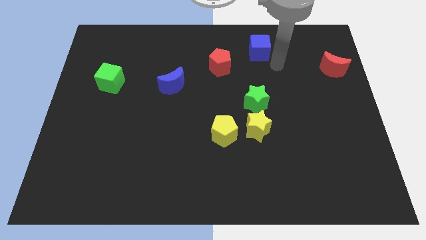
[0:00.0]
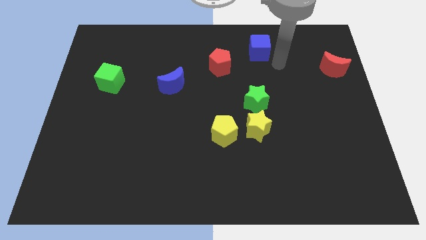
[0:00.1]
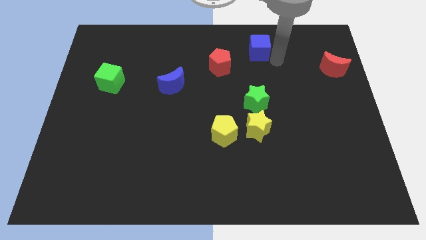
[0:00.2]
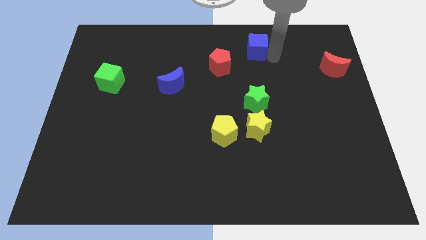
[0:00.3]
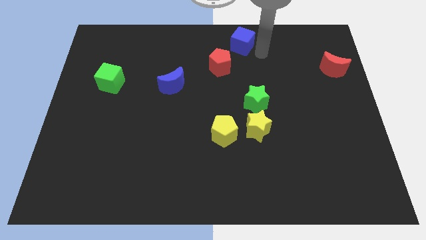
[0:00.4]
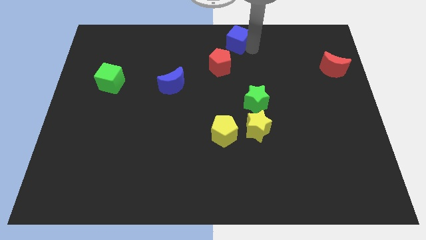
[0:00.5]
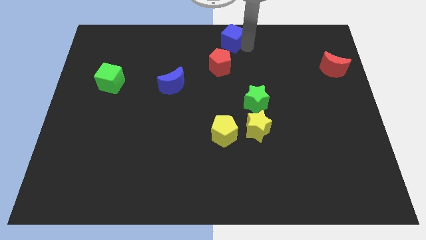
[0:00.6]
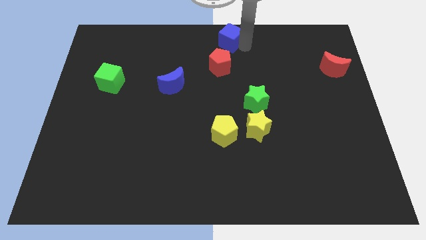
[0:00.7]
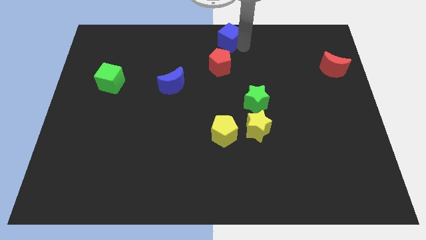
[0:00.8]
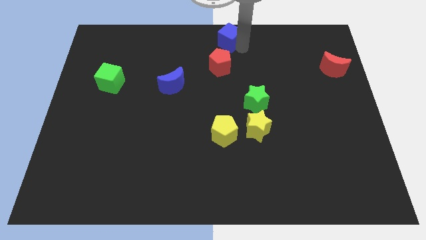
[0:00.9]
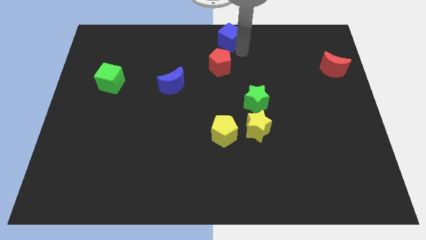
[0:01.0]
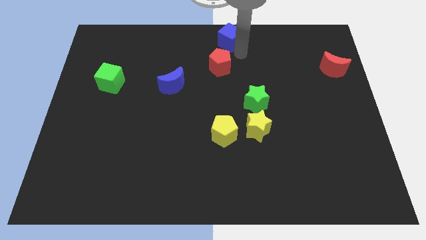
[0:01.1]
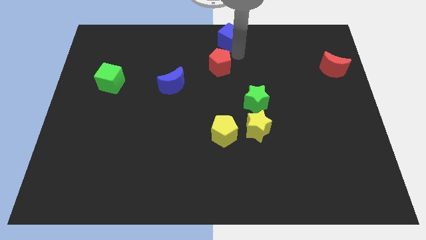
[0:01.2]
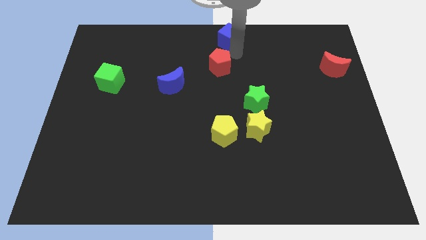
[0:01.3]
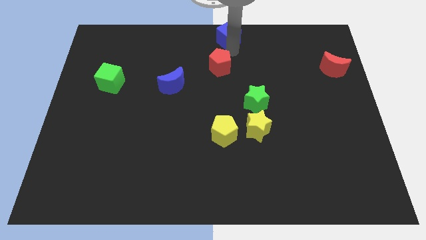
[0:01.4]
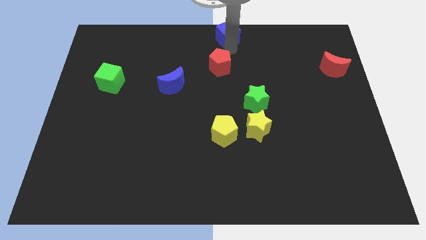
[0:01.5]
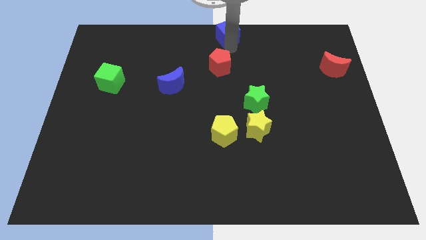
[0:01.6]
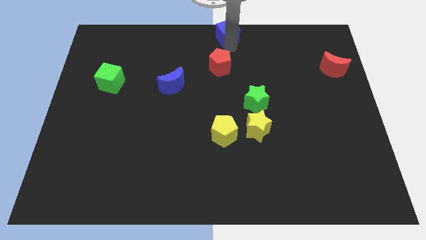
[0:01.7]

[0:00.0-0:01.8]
place the blue cube above the red pentagon

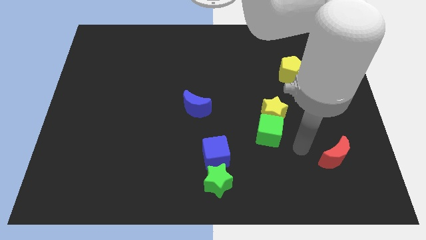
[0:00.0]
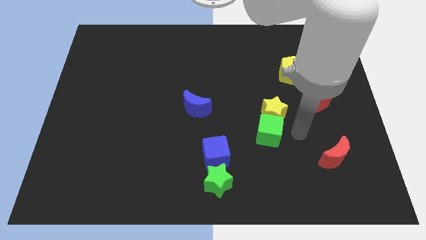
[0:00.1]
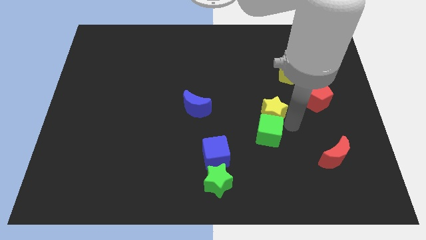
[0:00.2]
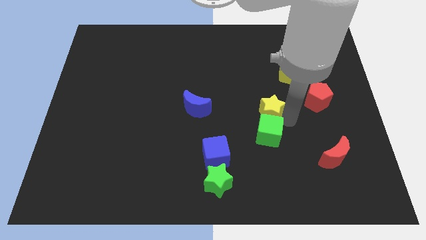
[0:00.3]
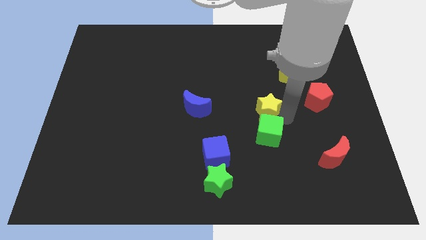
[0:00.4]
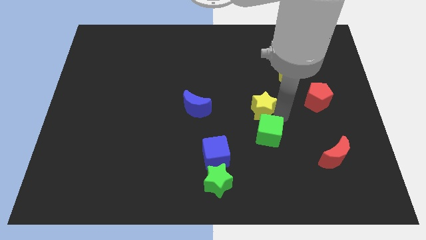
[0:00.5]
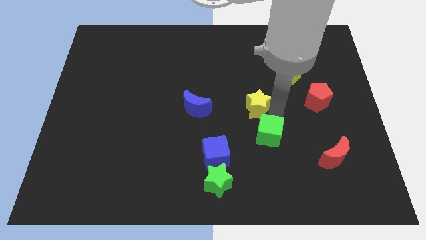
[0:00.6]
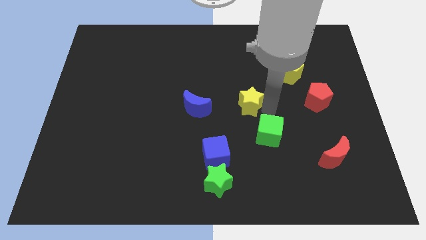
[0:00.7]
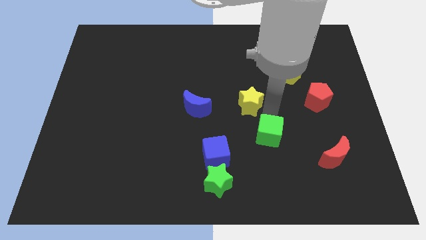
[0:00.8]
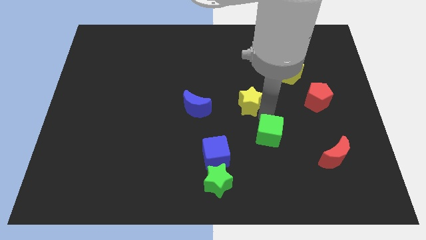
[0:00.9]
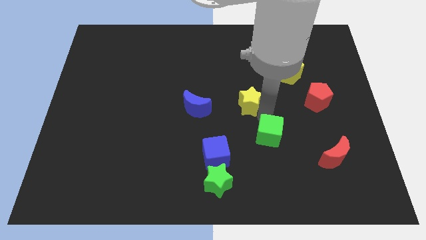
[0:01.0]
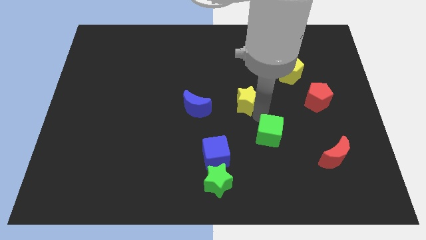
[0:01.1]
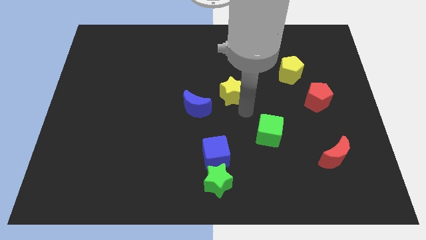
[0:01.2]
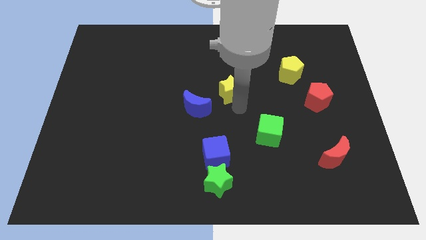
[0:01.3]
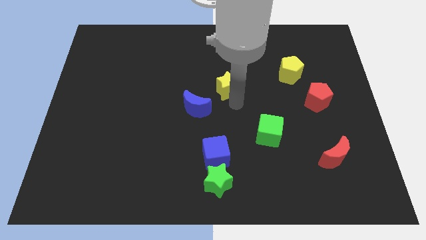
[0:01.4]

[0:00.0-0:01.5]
move the yellow star diagonally top right to the blue moon

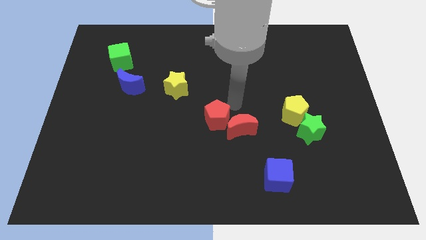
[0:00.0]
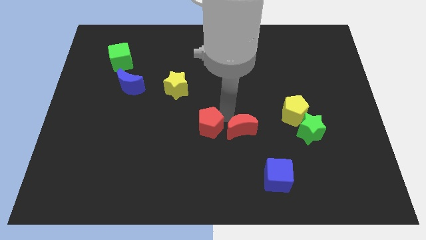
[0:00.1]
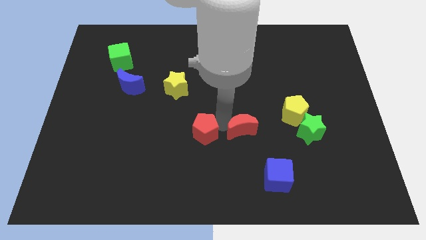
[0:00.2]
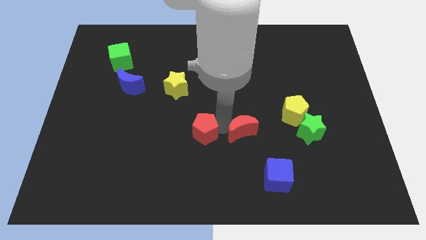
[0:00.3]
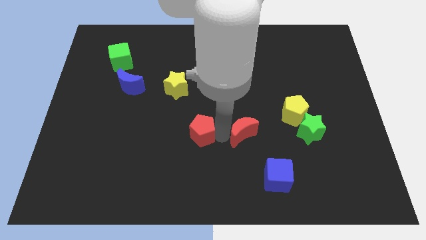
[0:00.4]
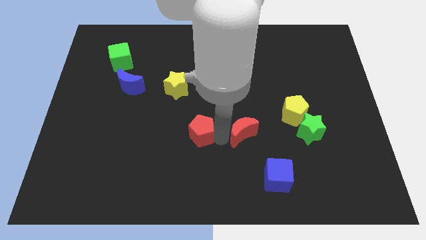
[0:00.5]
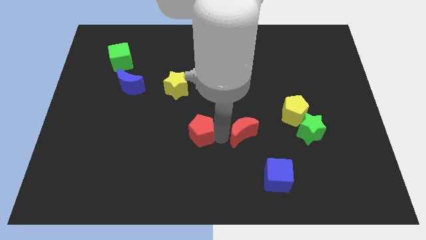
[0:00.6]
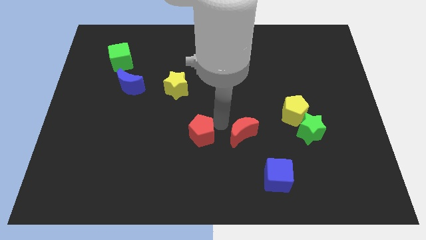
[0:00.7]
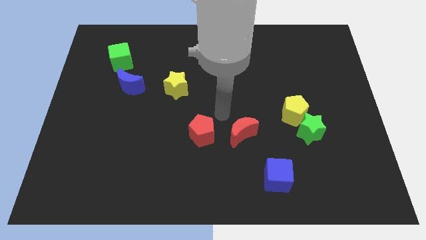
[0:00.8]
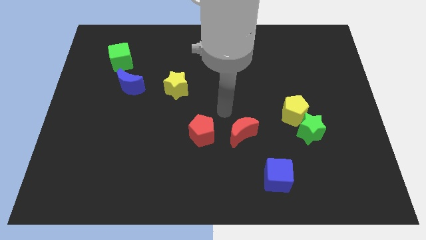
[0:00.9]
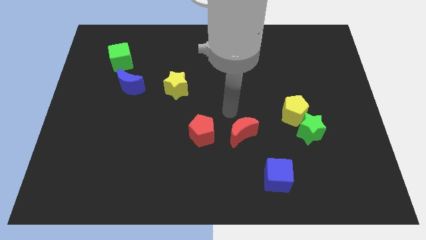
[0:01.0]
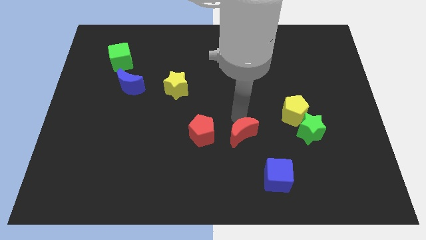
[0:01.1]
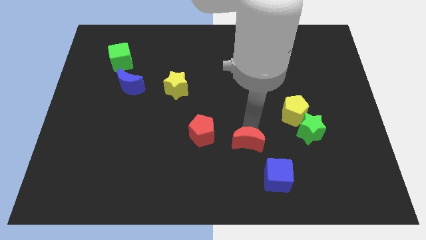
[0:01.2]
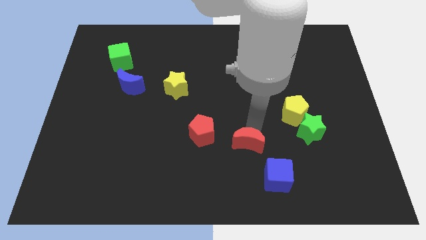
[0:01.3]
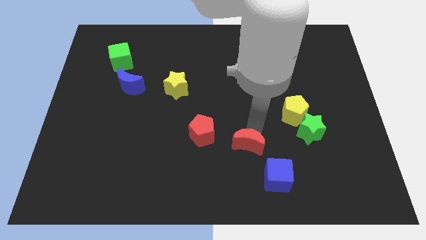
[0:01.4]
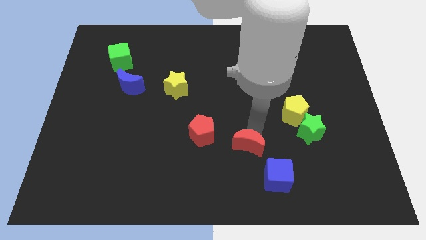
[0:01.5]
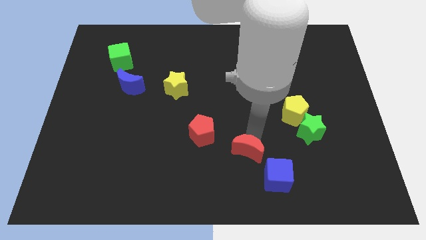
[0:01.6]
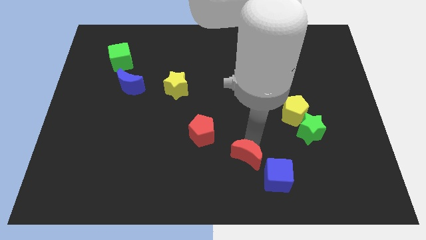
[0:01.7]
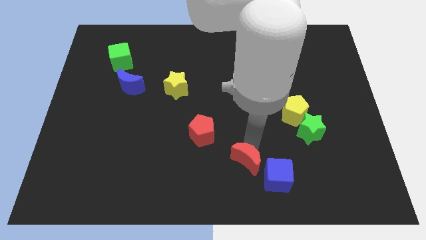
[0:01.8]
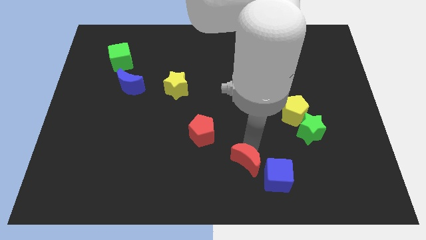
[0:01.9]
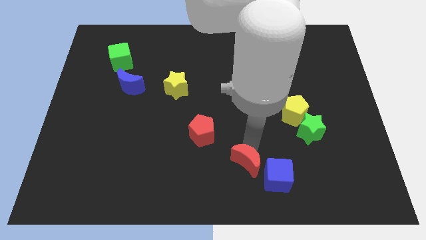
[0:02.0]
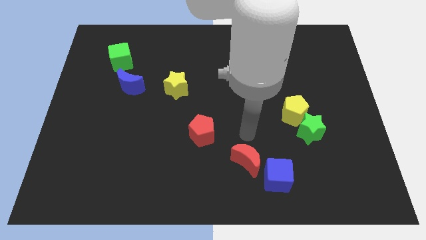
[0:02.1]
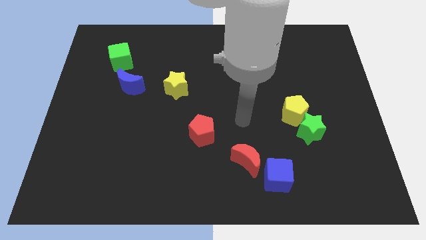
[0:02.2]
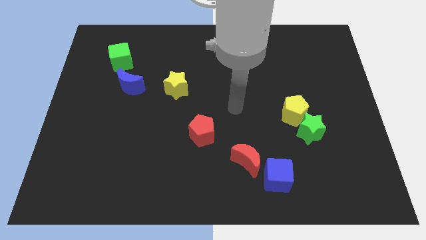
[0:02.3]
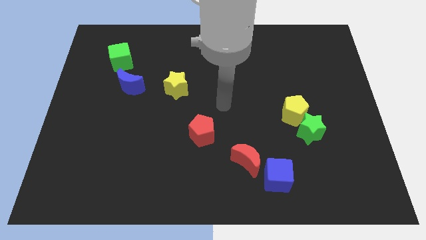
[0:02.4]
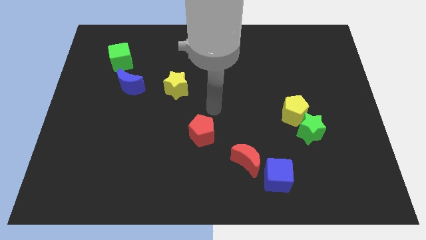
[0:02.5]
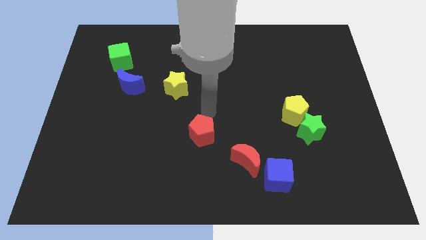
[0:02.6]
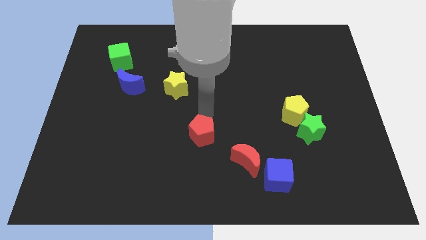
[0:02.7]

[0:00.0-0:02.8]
place the red moon in between the red pentagon and blue cube

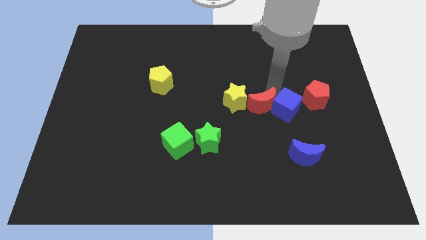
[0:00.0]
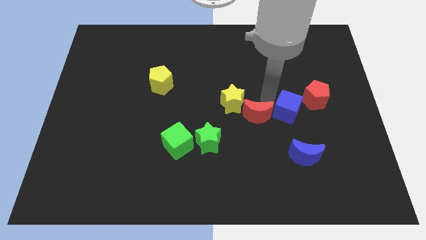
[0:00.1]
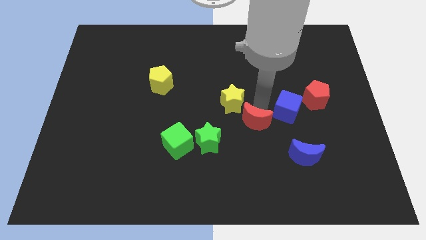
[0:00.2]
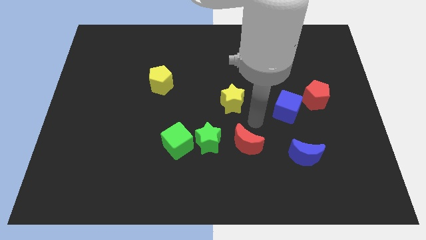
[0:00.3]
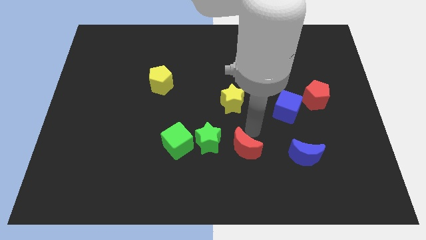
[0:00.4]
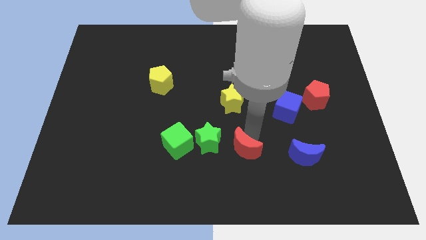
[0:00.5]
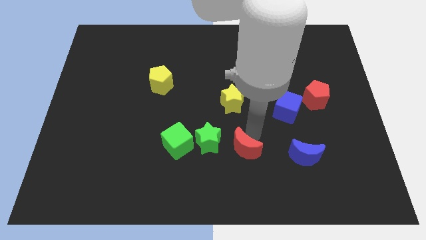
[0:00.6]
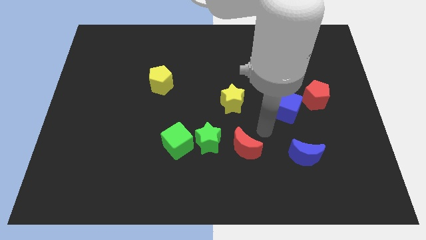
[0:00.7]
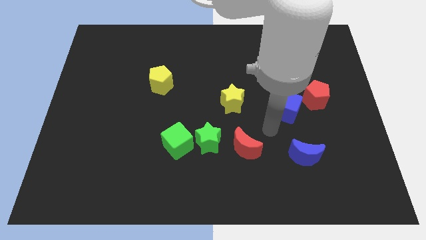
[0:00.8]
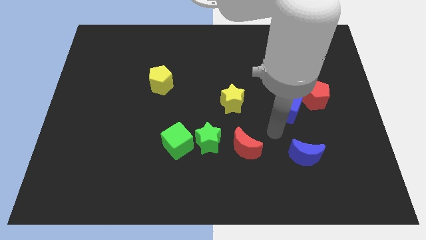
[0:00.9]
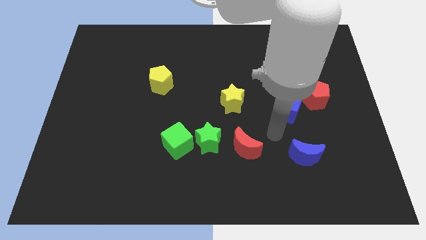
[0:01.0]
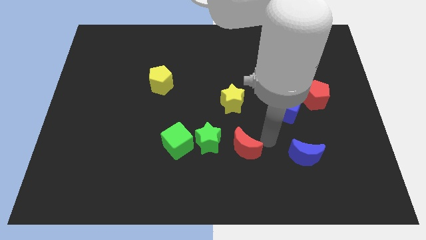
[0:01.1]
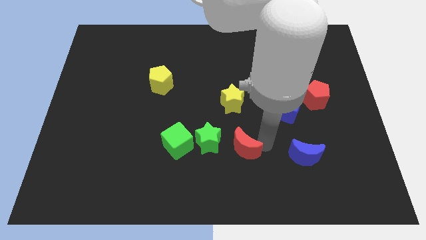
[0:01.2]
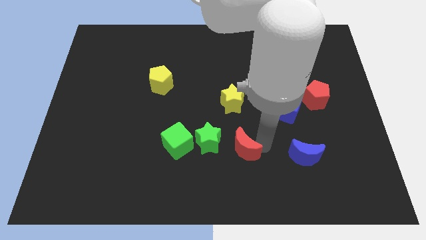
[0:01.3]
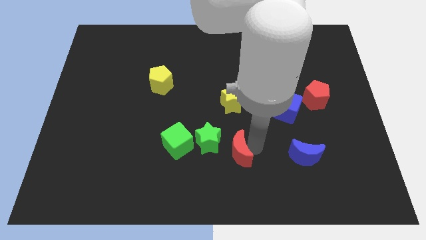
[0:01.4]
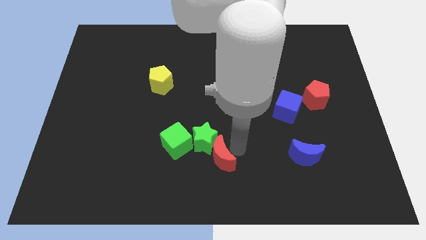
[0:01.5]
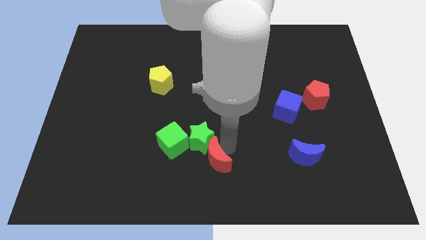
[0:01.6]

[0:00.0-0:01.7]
move the red moon into the green star

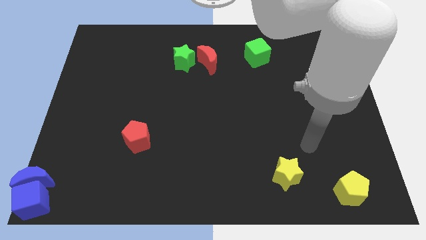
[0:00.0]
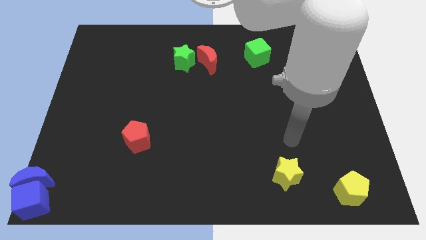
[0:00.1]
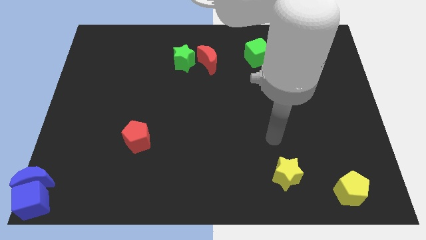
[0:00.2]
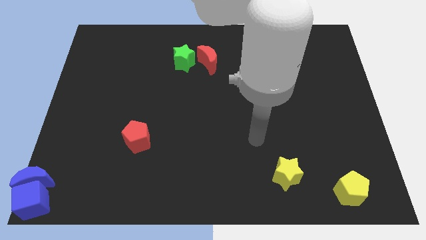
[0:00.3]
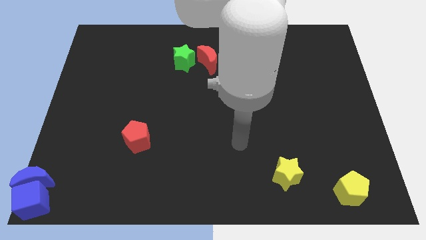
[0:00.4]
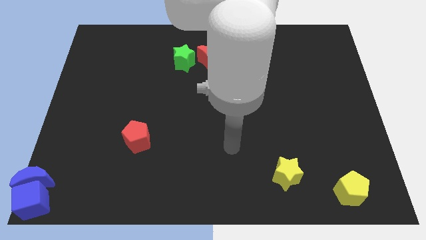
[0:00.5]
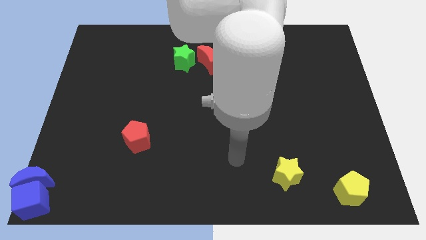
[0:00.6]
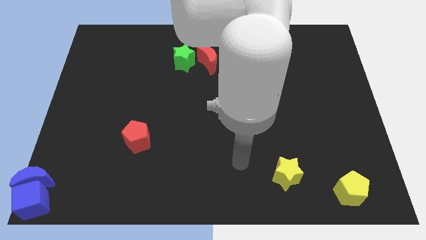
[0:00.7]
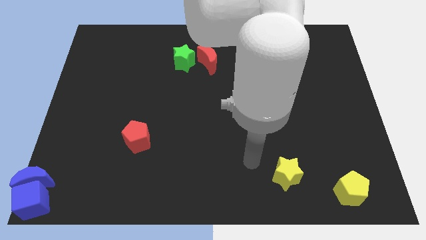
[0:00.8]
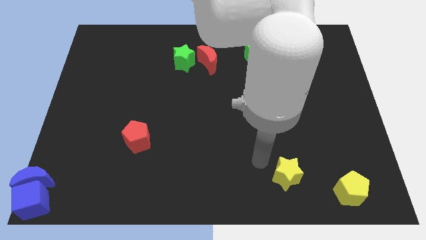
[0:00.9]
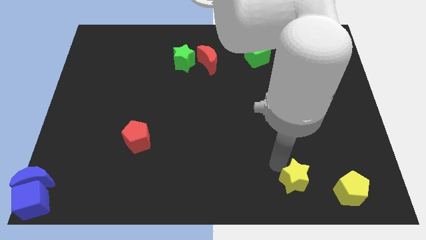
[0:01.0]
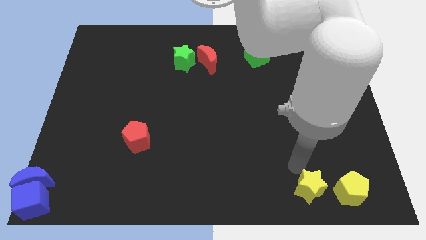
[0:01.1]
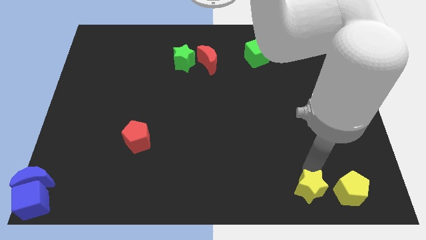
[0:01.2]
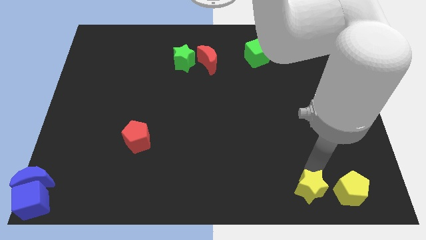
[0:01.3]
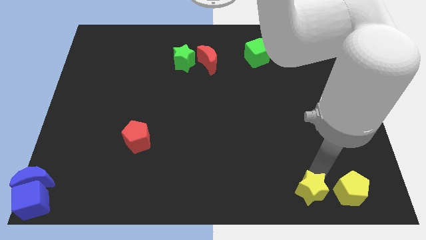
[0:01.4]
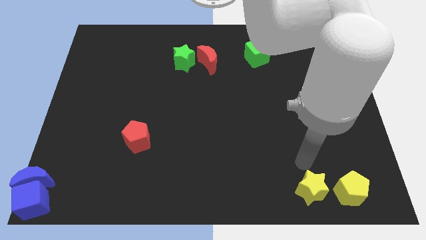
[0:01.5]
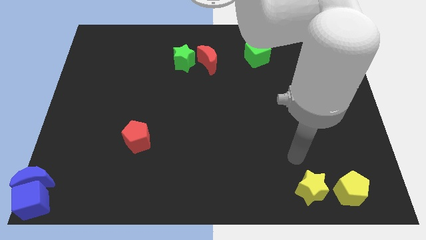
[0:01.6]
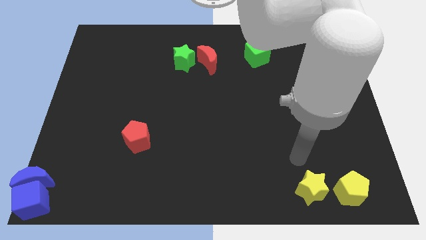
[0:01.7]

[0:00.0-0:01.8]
move the yellow star to the left side of the yellow penatgon
